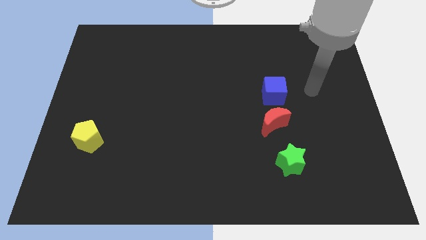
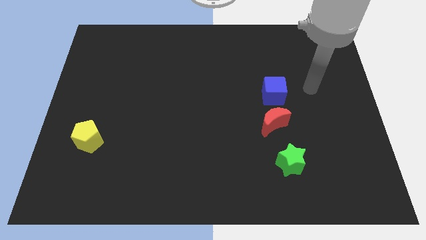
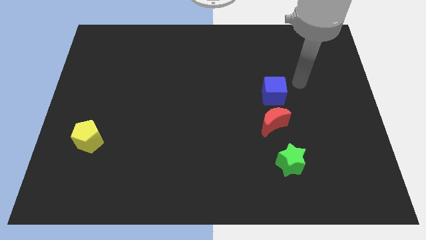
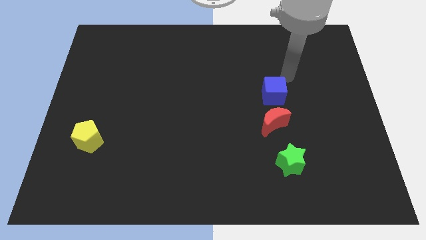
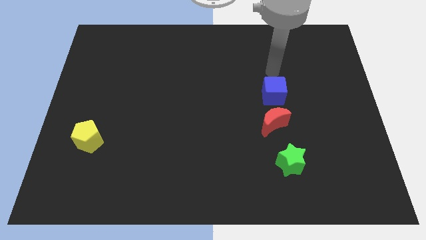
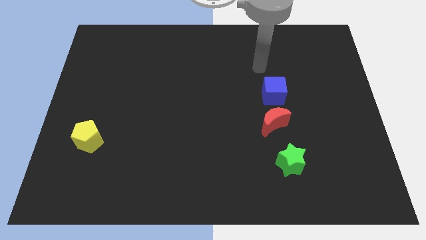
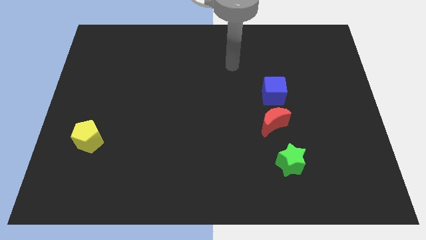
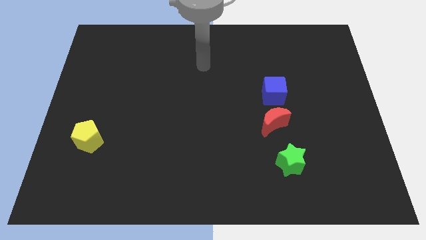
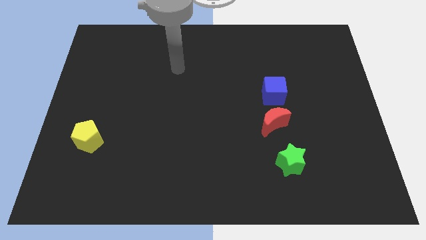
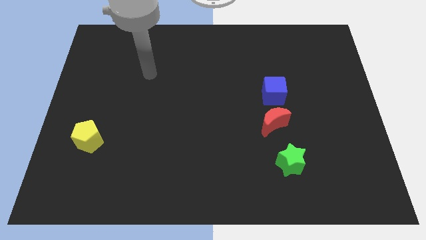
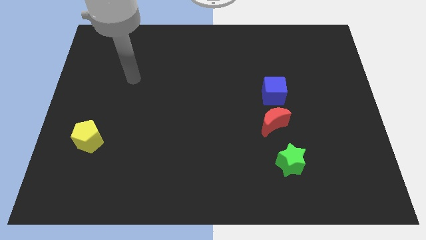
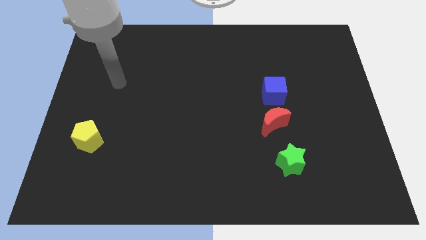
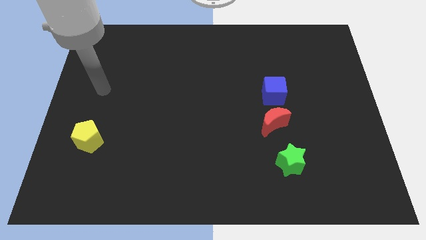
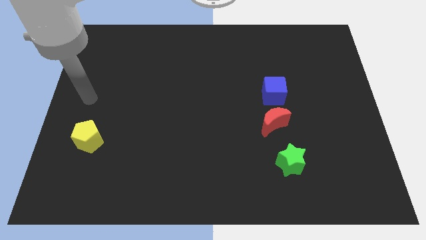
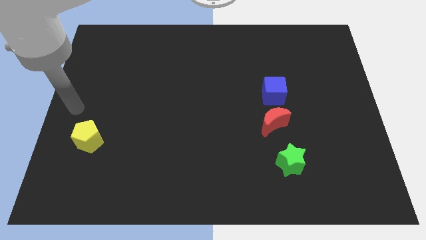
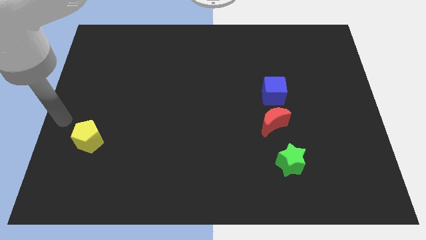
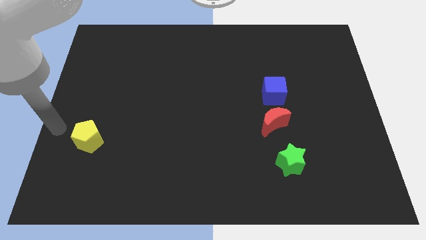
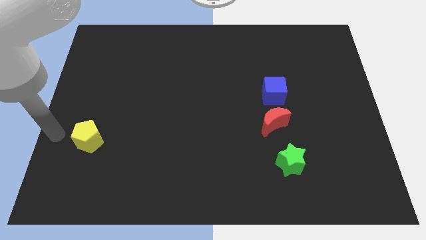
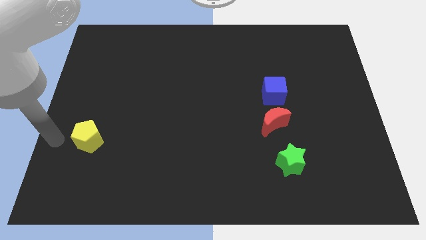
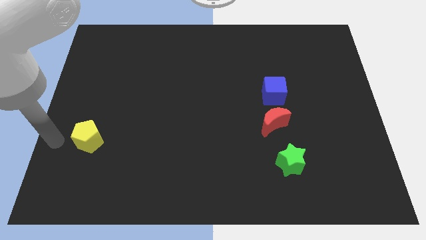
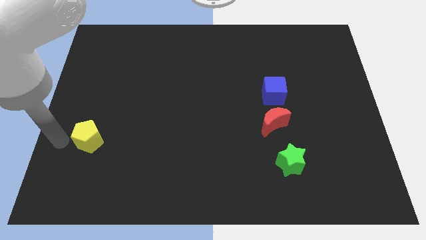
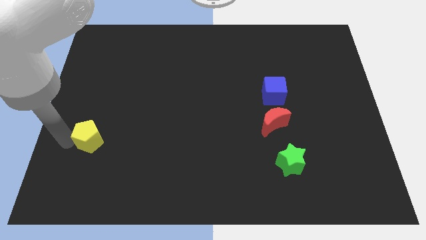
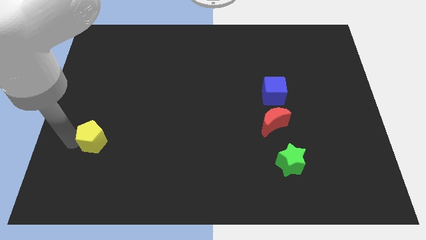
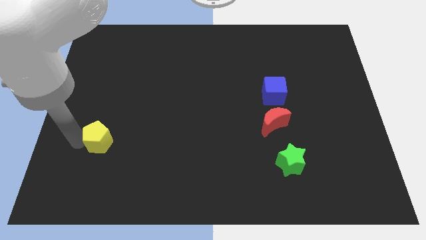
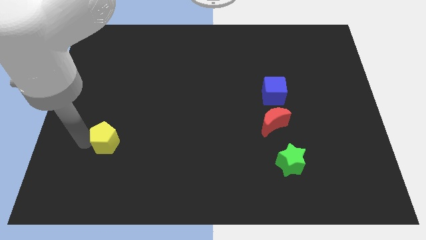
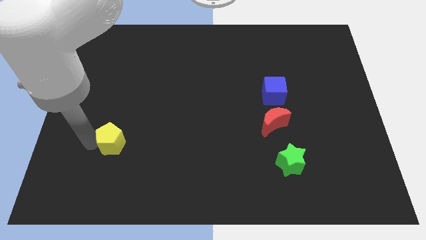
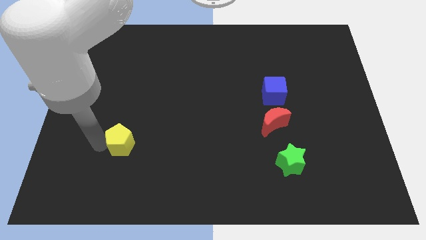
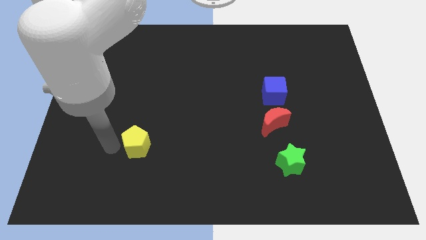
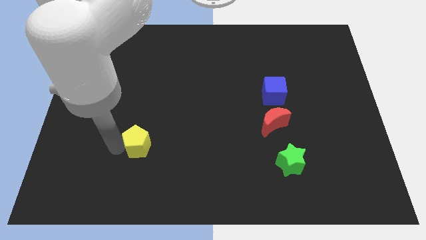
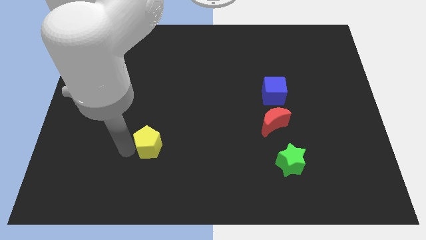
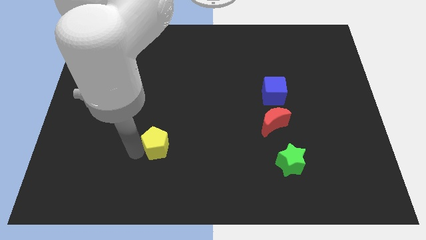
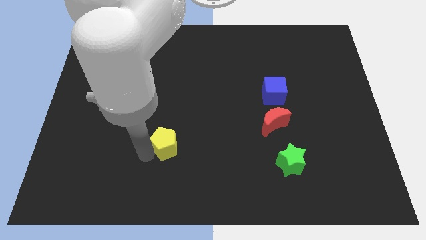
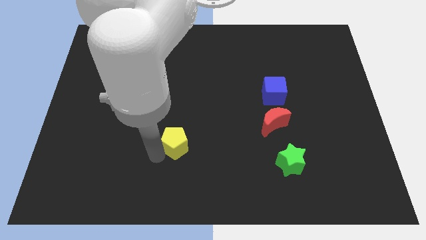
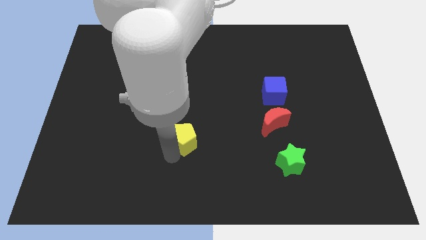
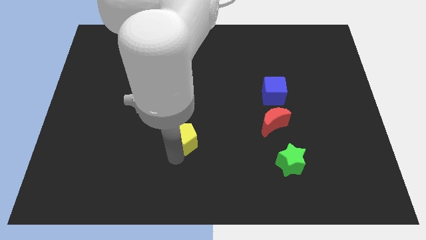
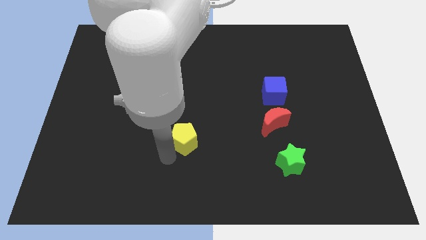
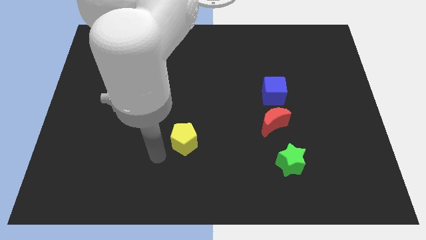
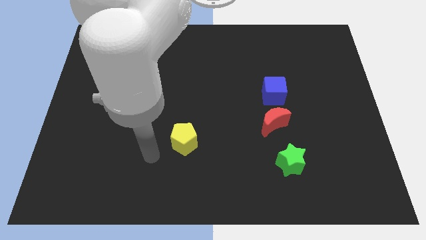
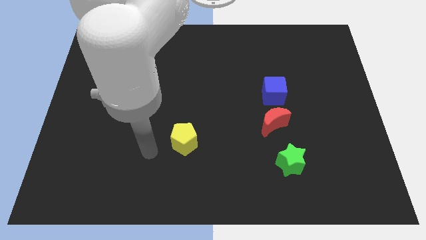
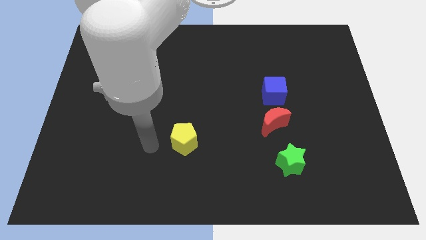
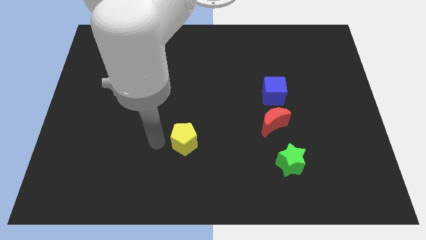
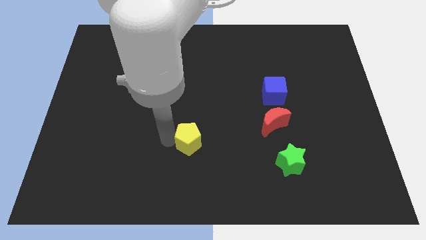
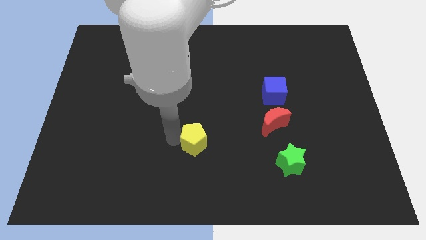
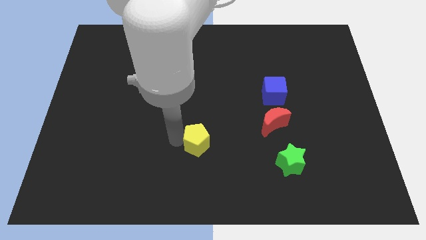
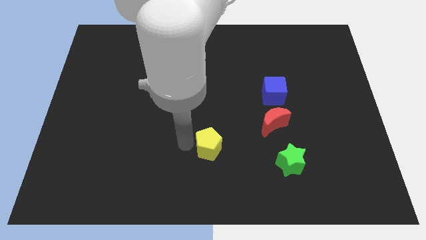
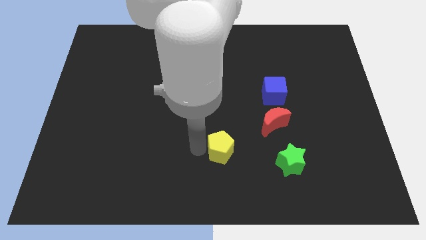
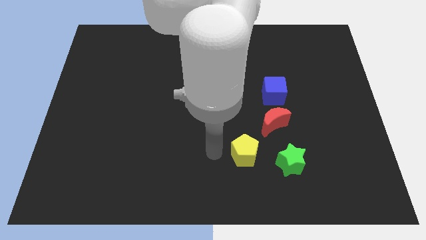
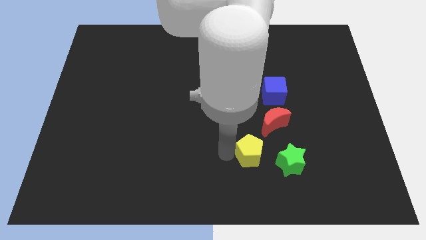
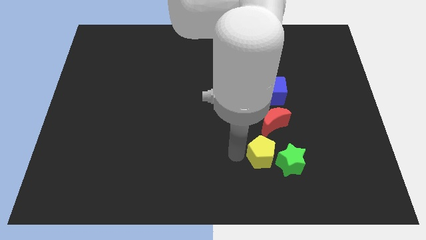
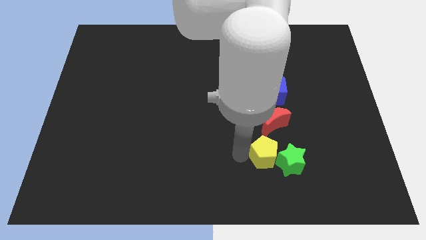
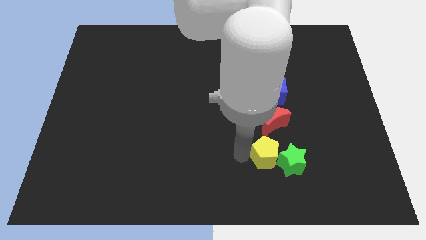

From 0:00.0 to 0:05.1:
push the yellow pentagon to the green block

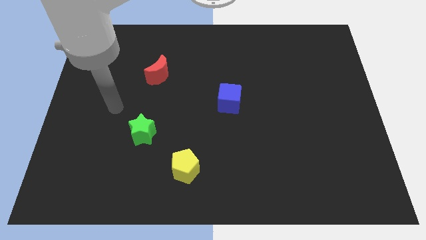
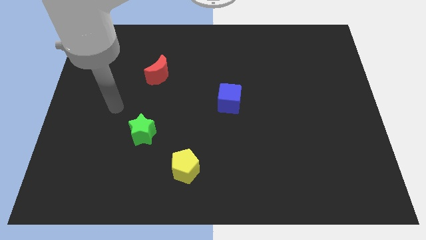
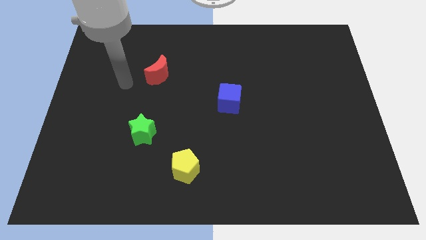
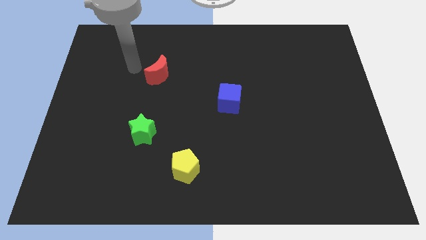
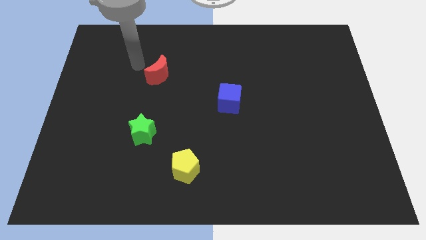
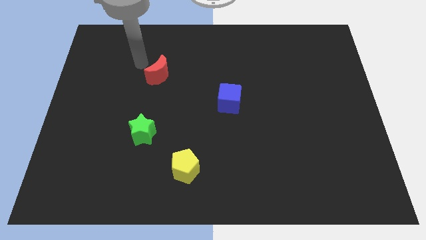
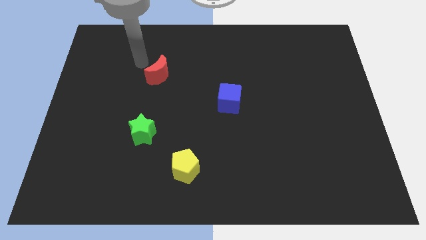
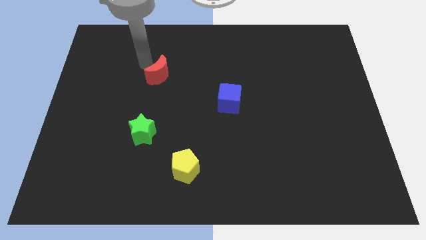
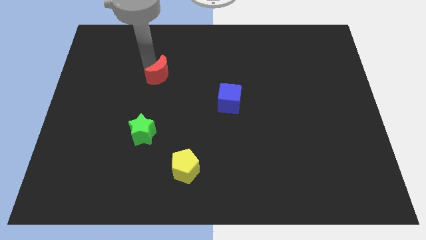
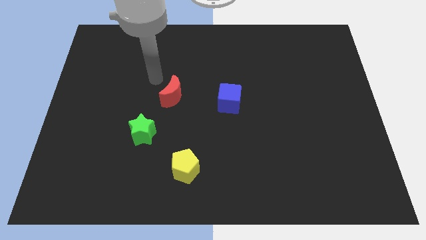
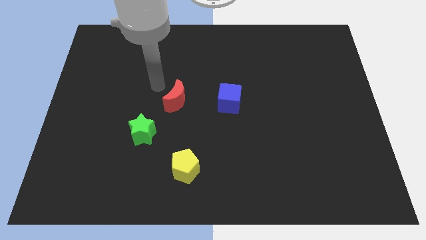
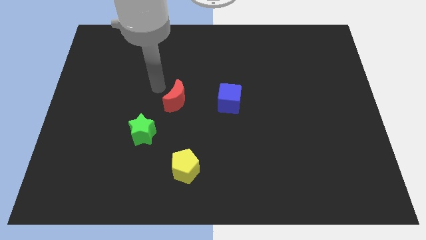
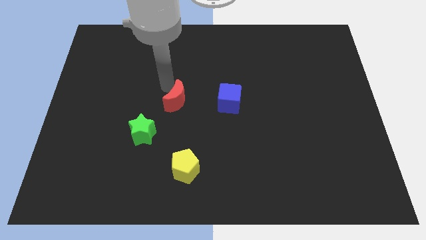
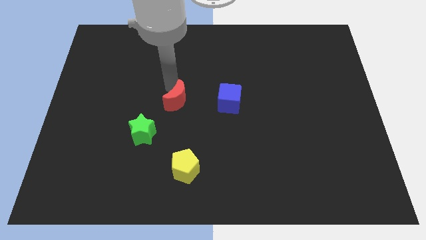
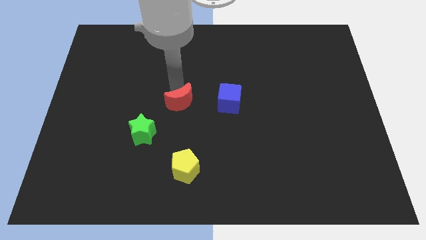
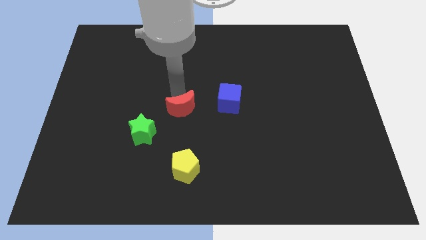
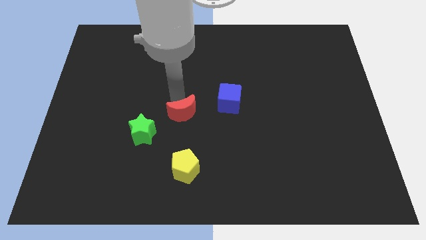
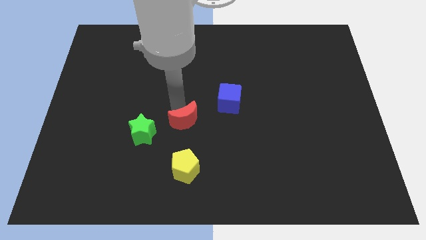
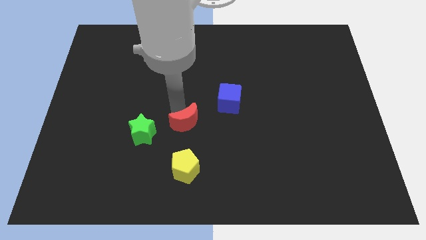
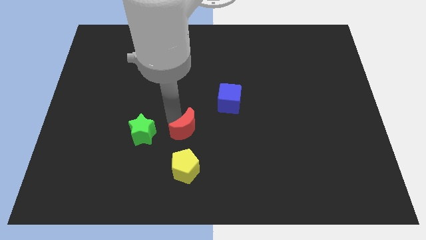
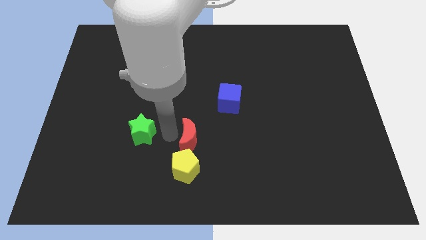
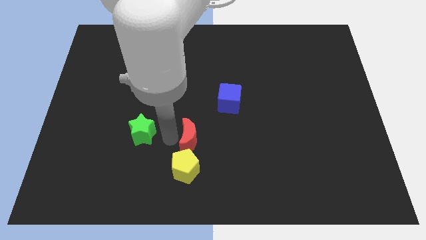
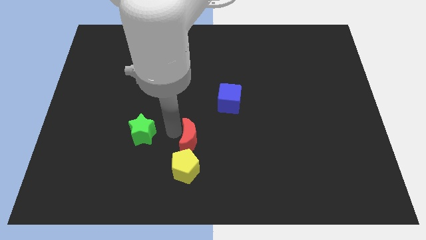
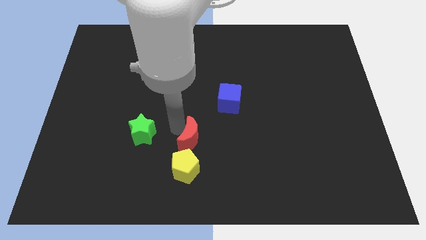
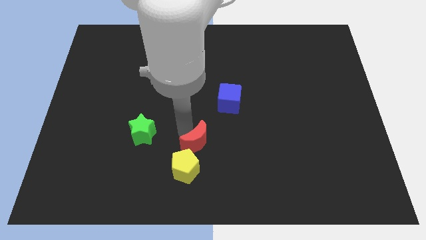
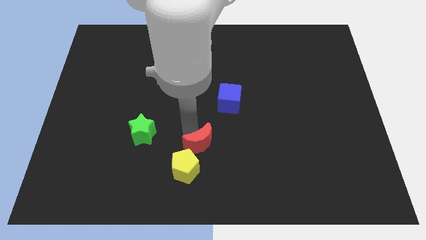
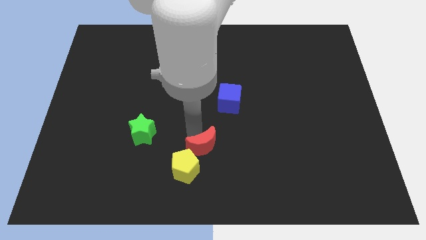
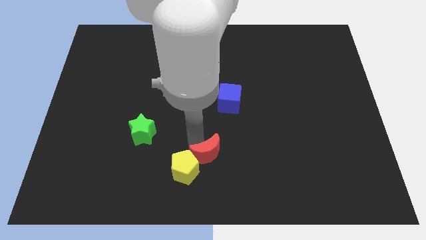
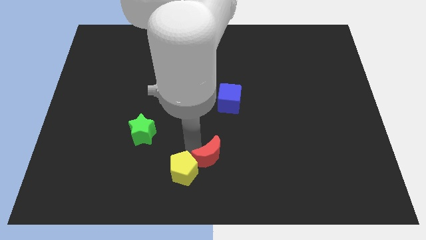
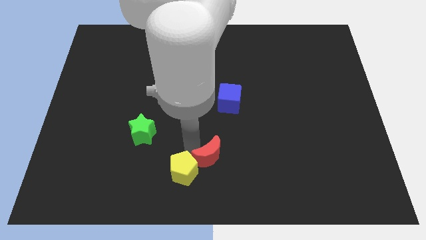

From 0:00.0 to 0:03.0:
put the red moon close to the yellow pentagon
